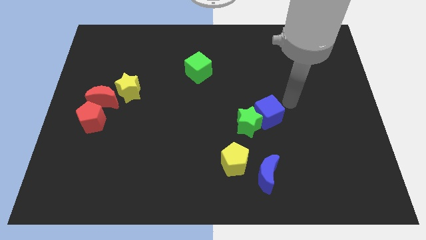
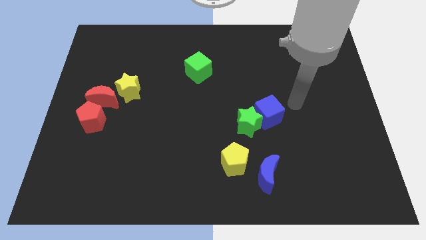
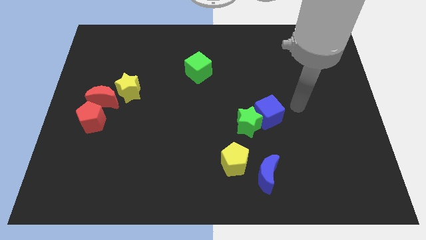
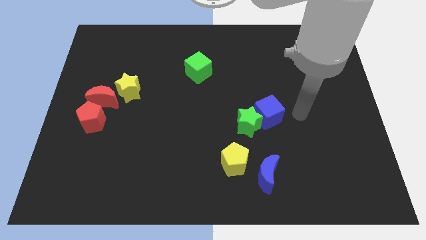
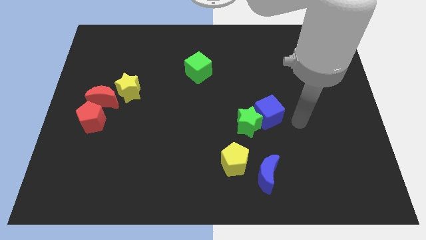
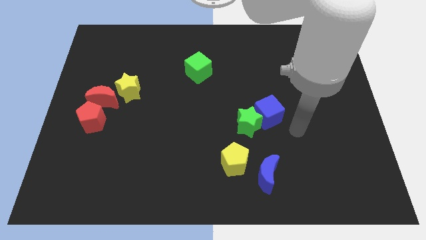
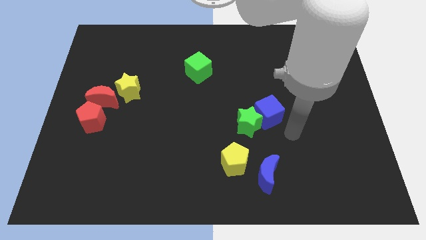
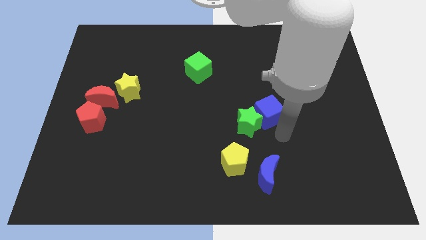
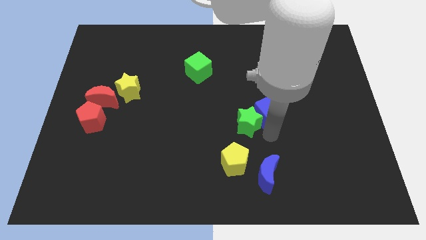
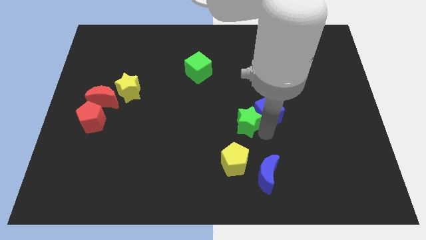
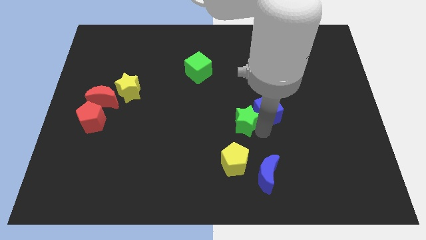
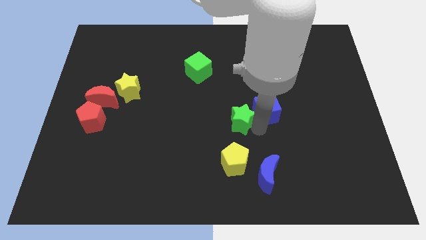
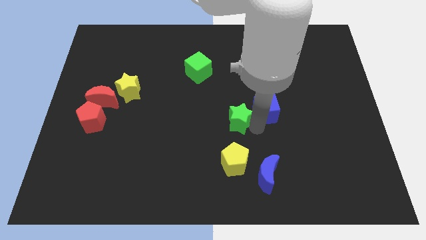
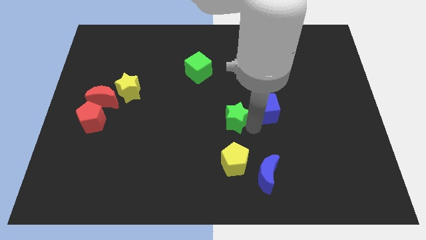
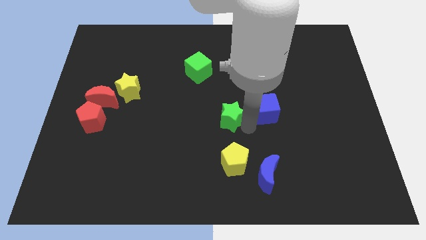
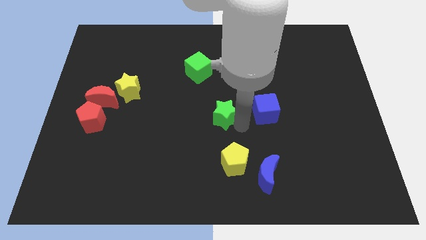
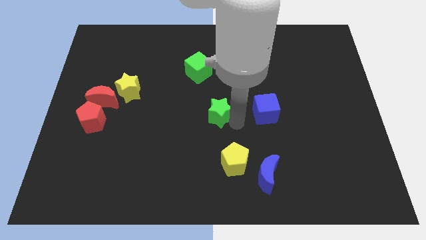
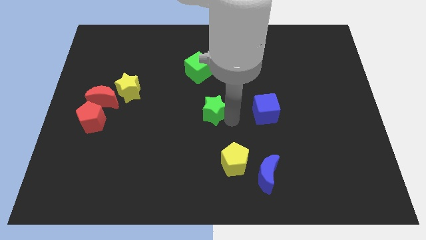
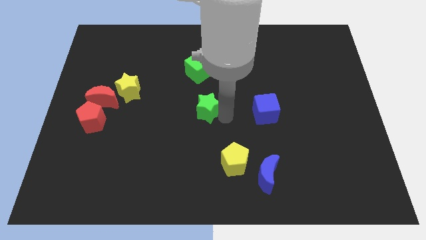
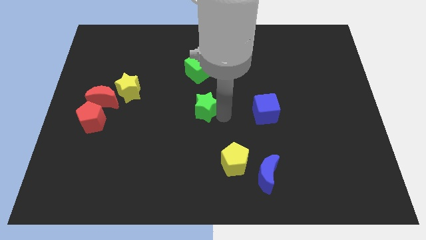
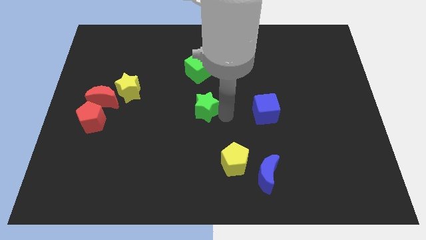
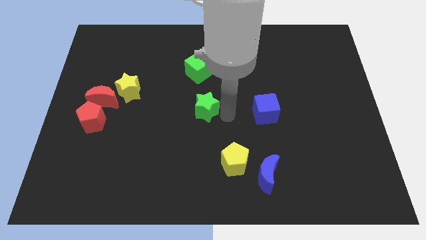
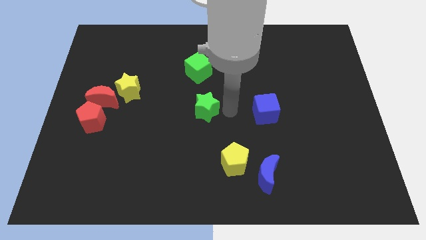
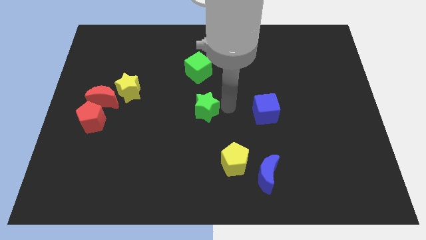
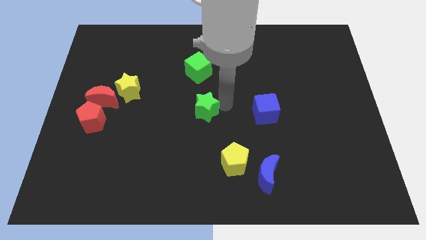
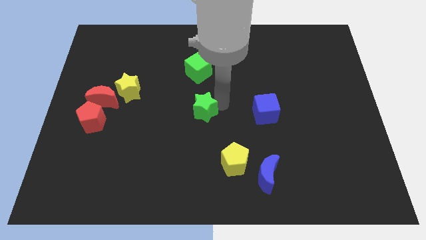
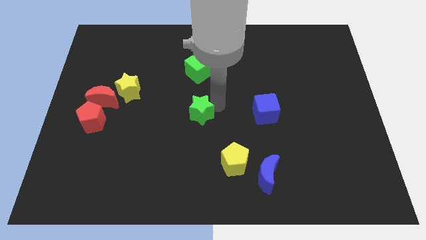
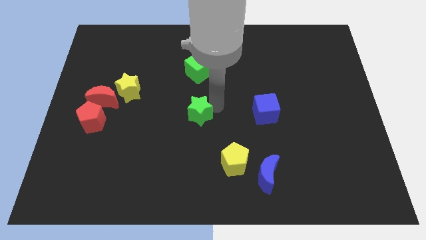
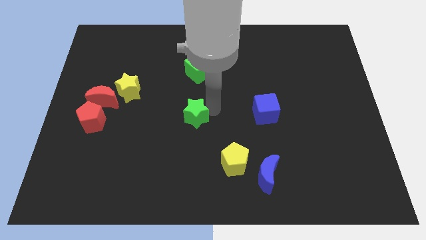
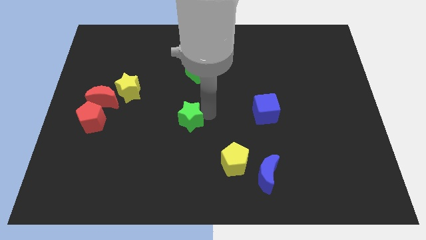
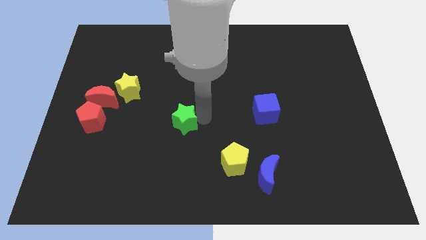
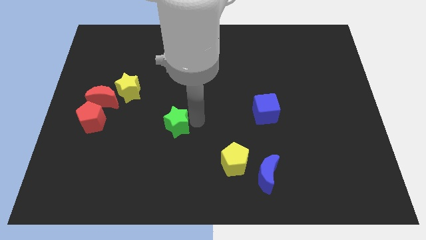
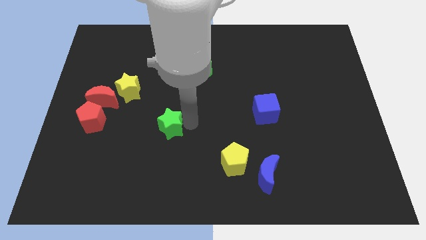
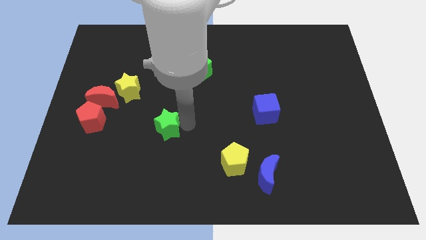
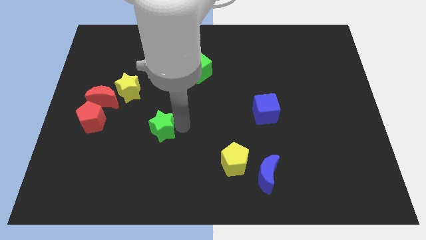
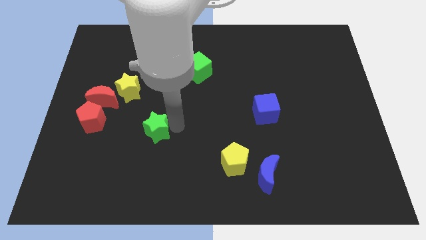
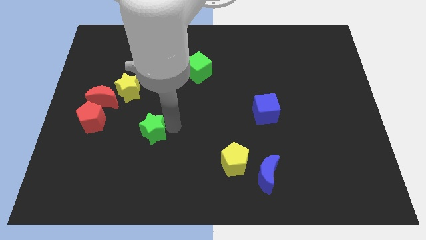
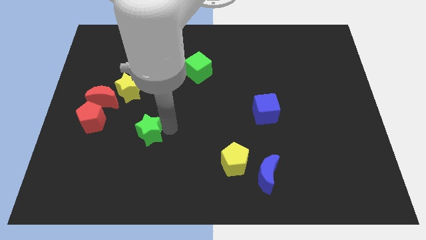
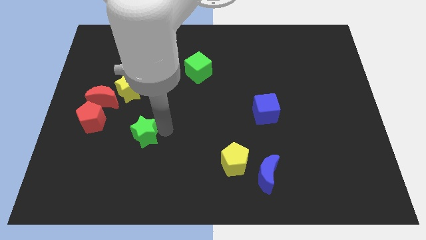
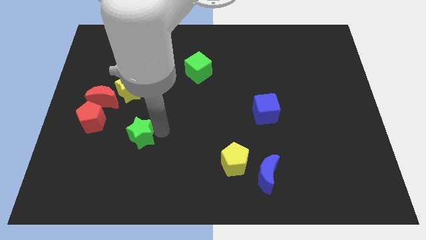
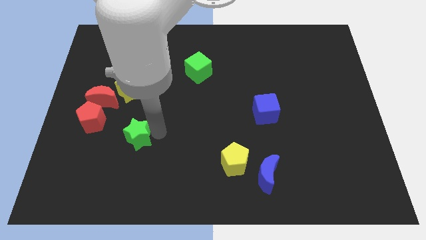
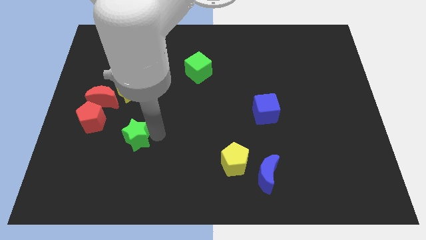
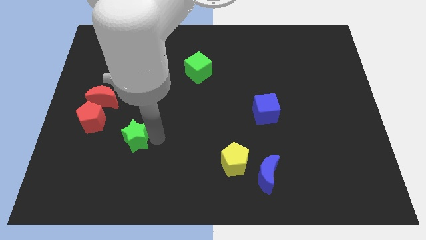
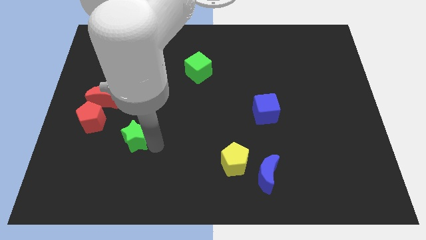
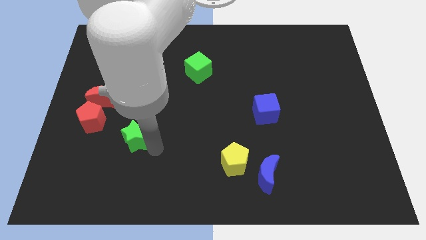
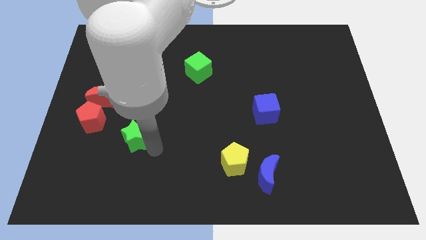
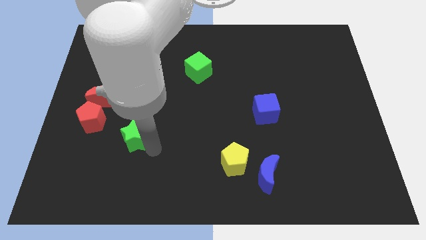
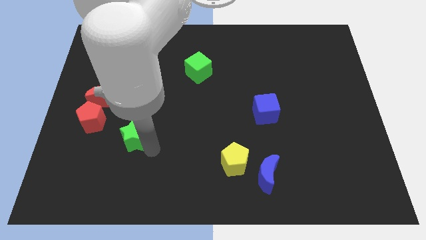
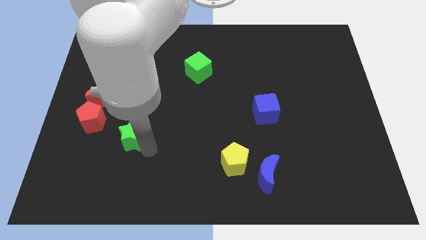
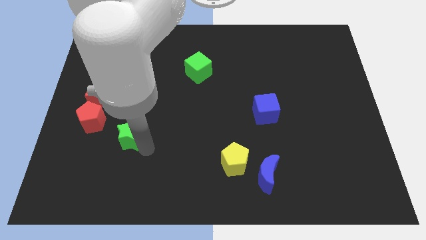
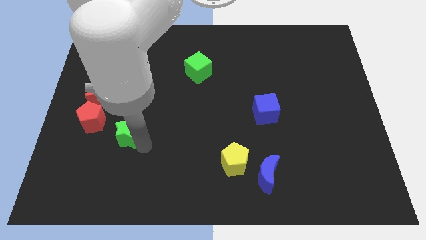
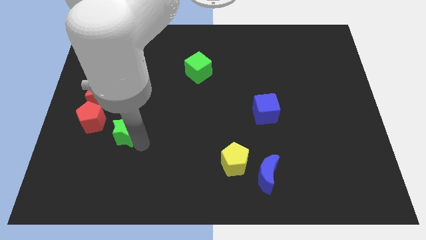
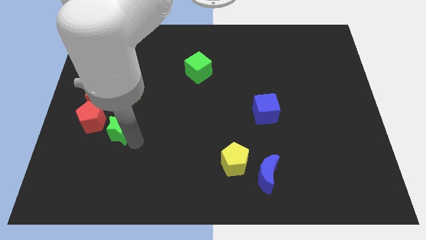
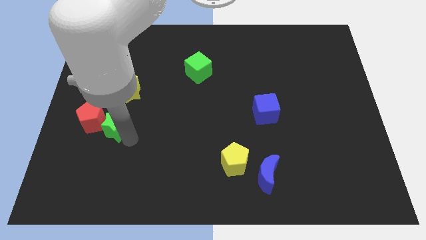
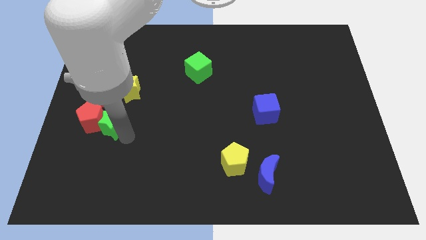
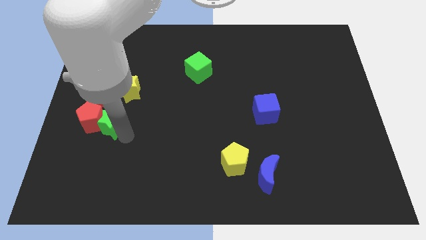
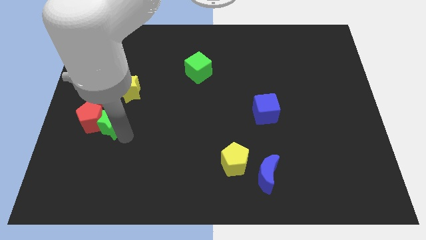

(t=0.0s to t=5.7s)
move the green star close to the red pentagon

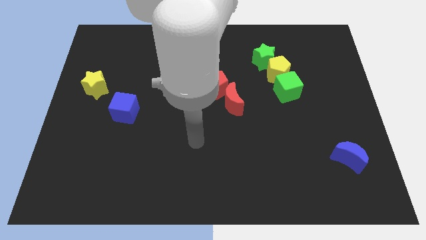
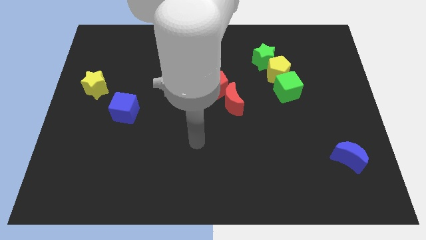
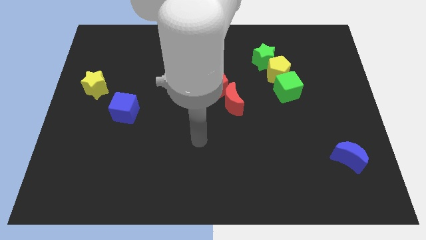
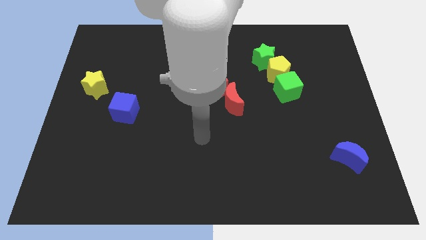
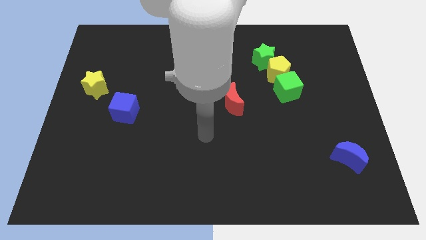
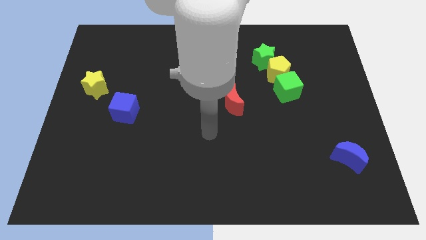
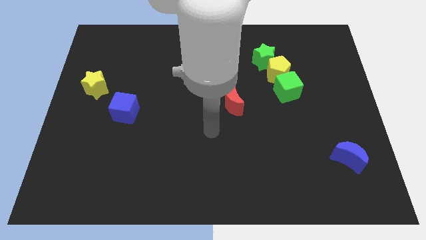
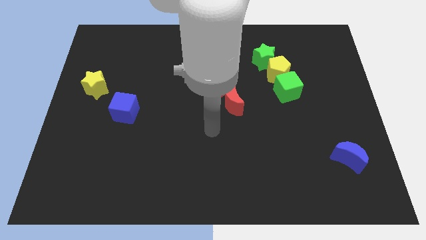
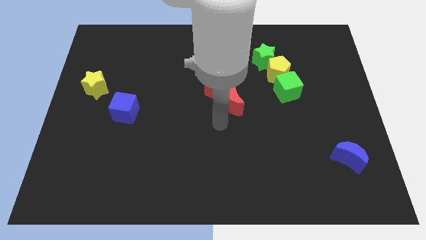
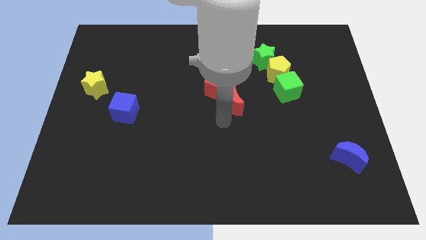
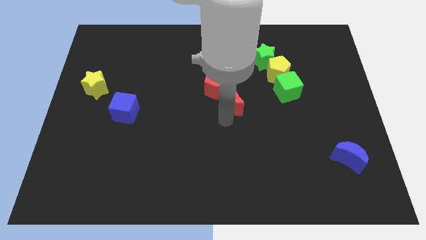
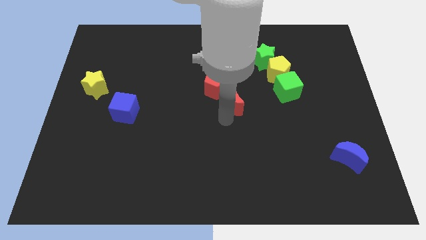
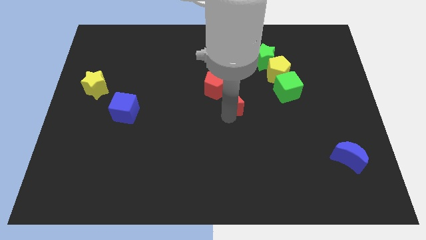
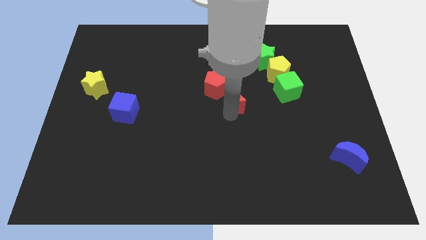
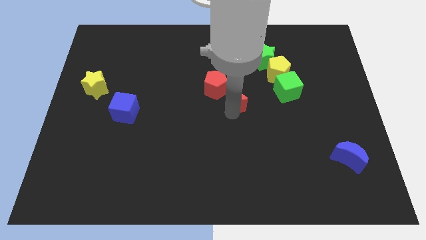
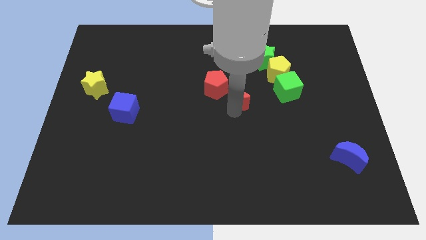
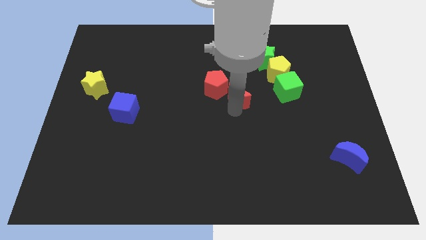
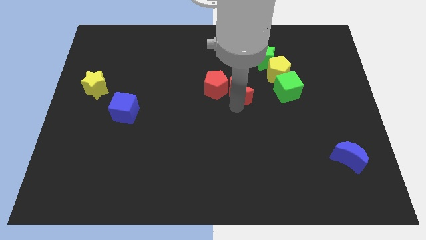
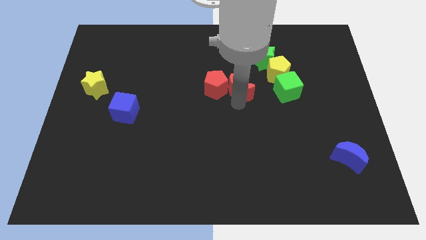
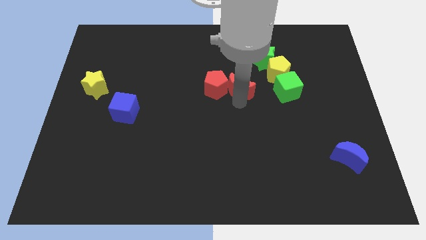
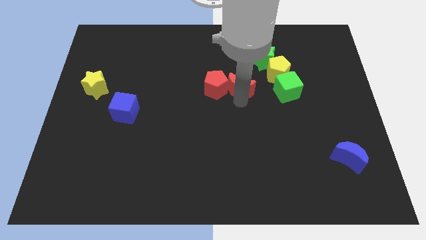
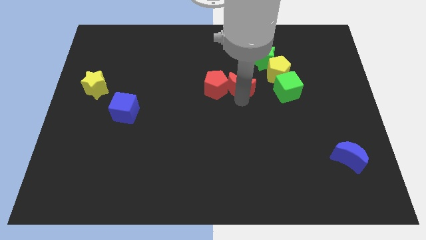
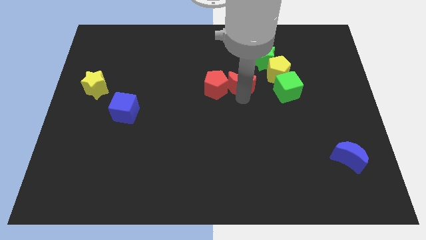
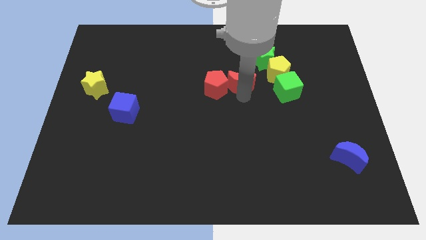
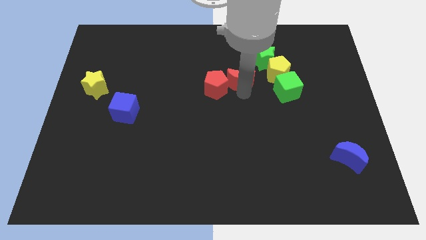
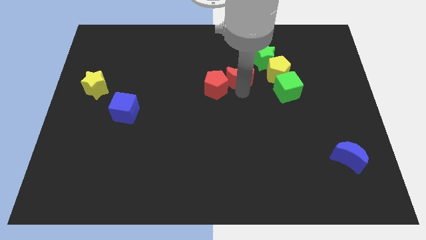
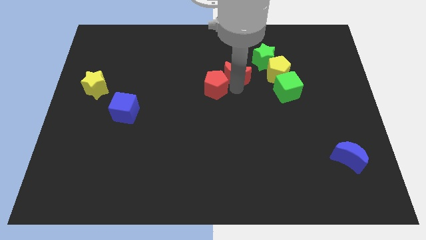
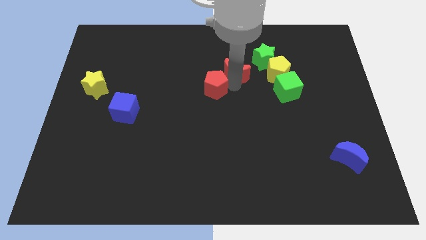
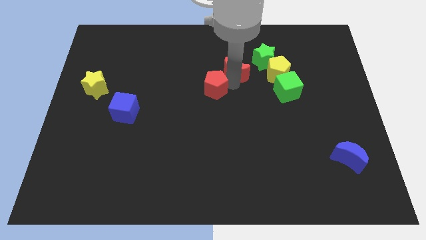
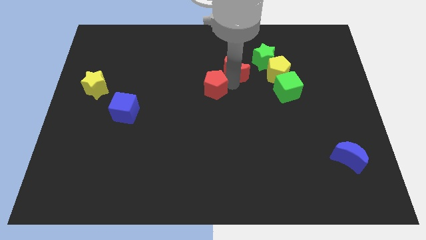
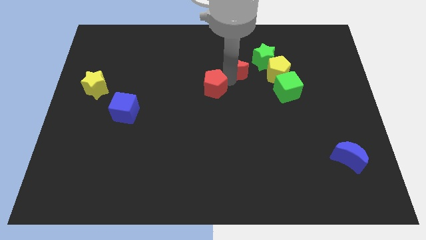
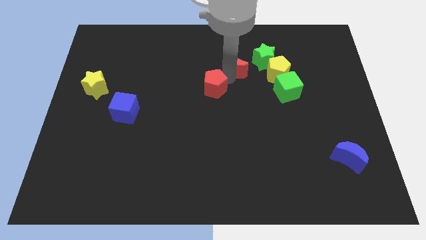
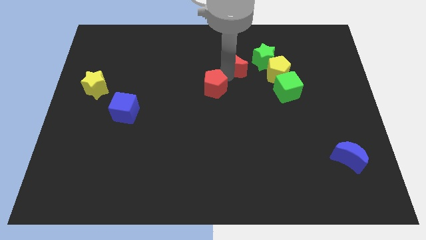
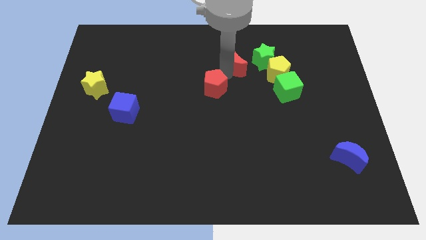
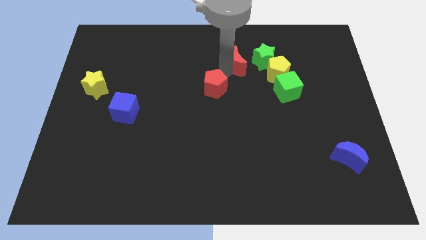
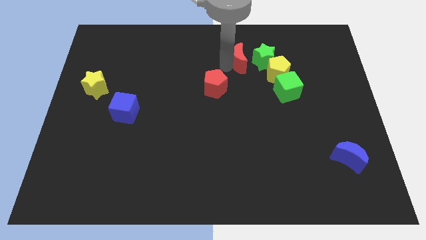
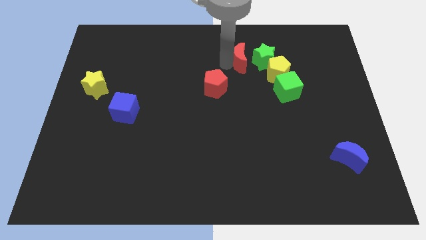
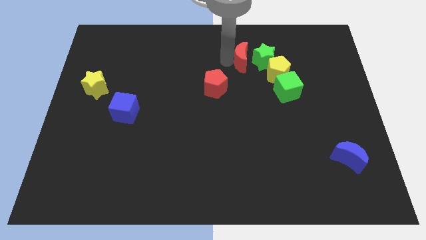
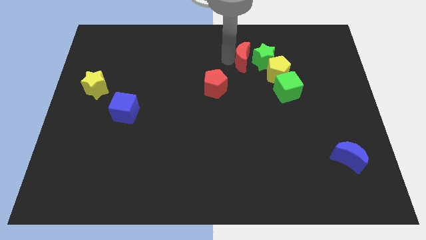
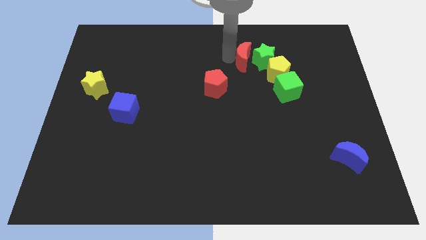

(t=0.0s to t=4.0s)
slide the red moon towards the green star
